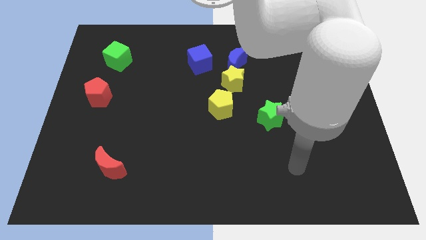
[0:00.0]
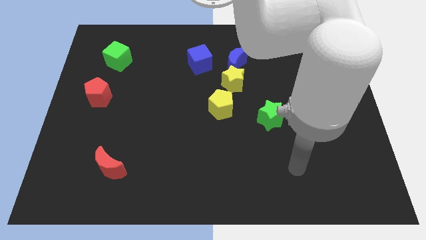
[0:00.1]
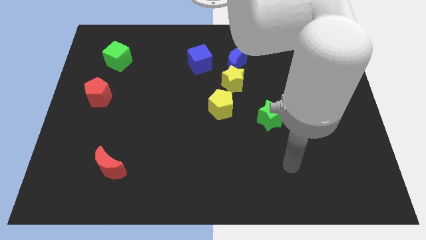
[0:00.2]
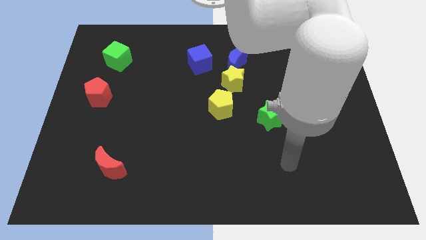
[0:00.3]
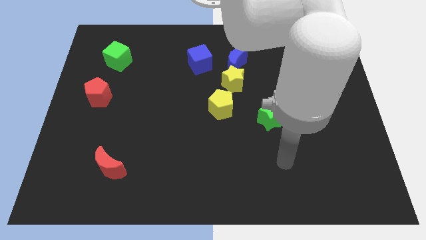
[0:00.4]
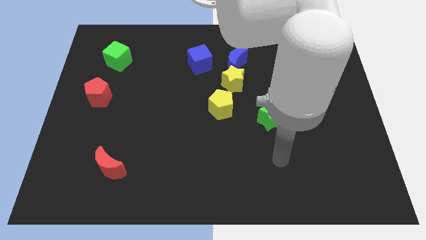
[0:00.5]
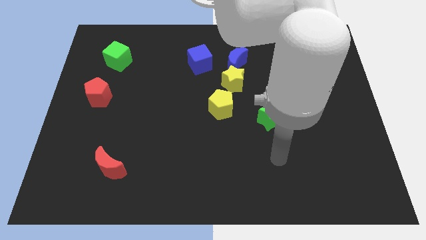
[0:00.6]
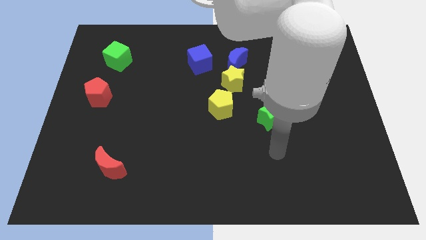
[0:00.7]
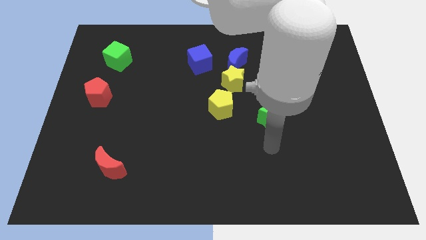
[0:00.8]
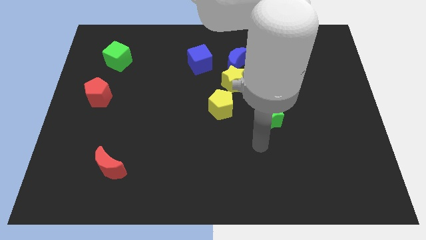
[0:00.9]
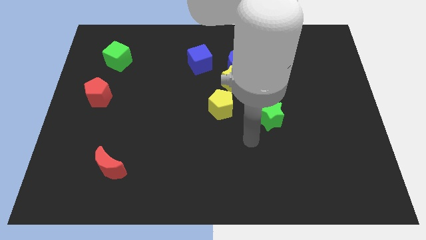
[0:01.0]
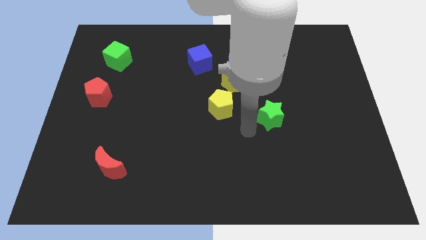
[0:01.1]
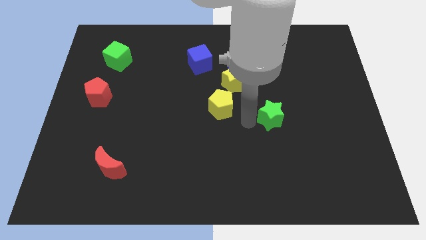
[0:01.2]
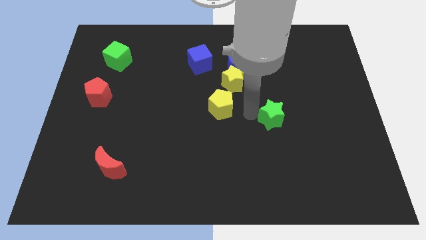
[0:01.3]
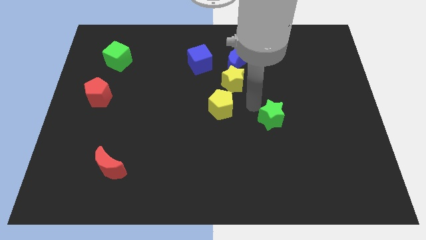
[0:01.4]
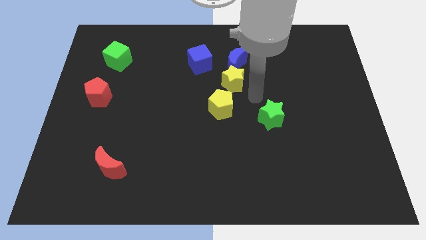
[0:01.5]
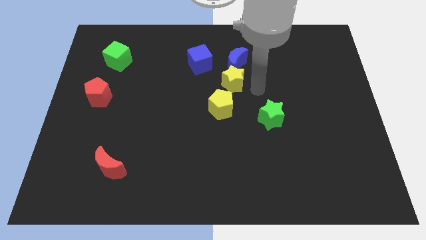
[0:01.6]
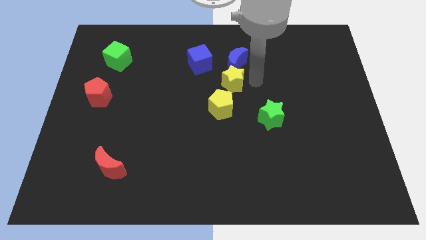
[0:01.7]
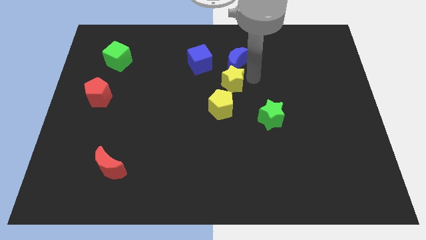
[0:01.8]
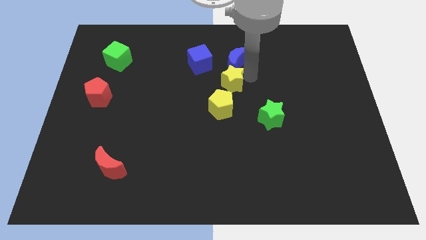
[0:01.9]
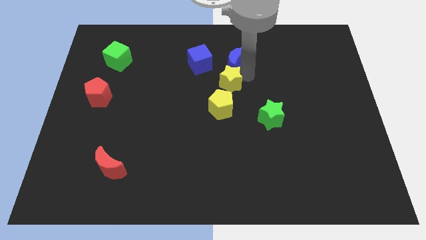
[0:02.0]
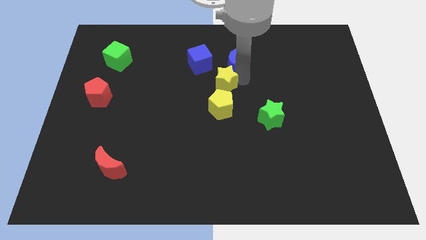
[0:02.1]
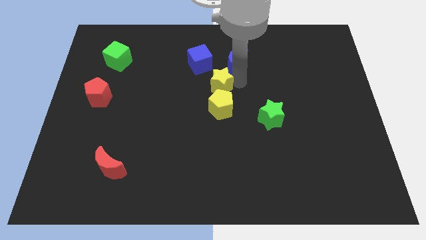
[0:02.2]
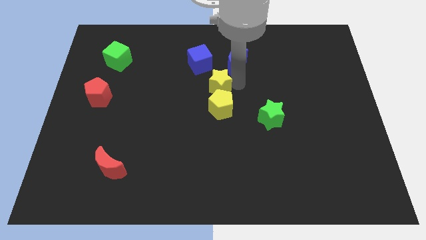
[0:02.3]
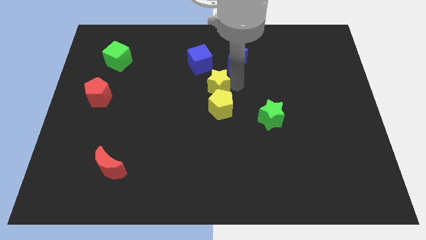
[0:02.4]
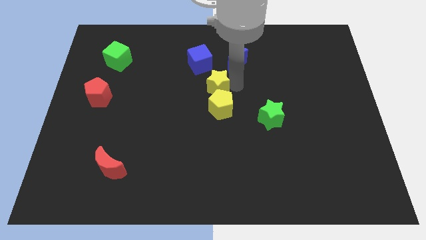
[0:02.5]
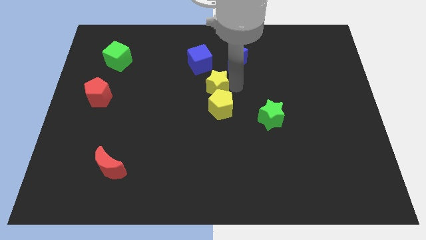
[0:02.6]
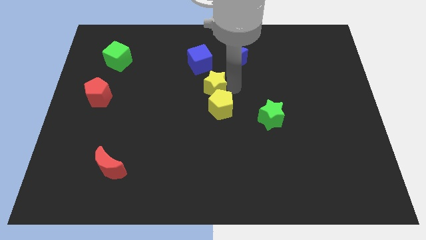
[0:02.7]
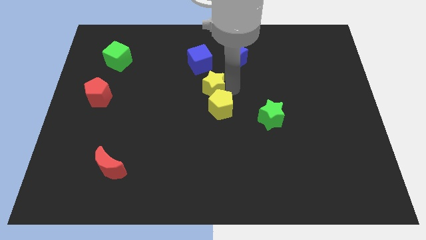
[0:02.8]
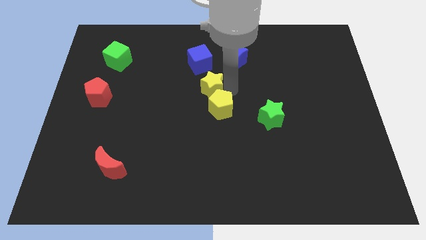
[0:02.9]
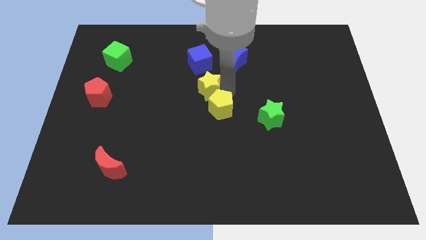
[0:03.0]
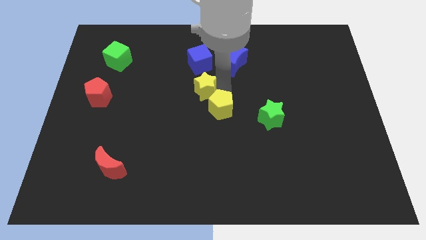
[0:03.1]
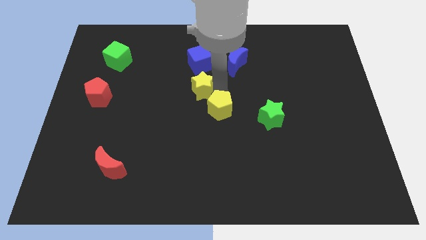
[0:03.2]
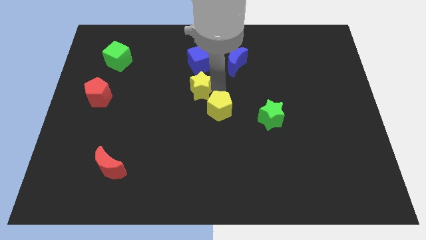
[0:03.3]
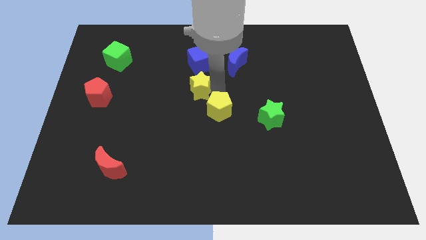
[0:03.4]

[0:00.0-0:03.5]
move your arm close to the yellow star

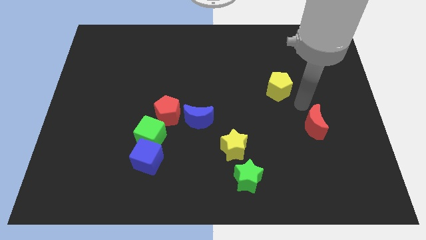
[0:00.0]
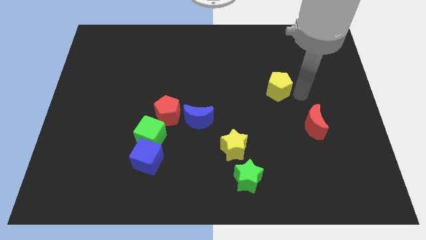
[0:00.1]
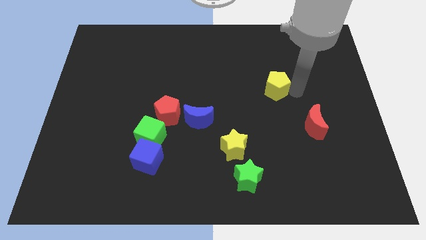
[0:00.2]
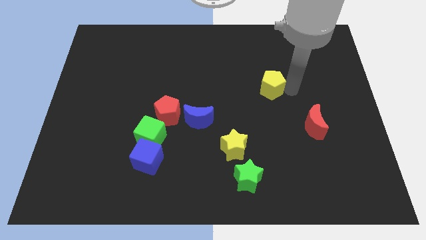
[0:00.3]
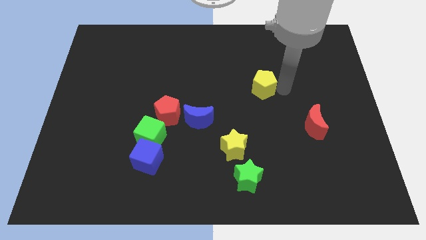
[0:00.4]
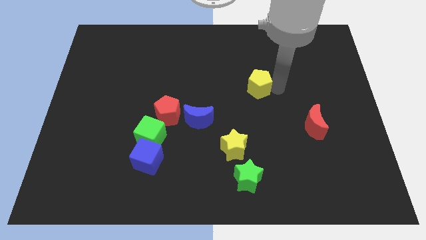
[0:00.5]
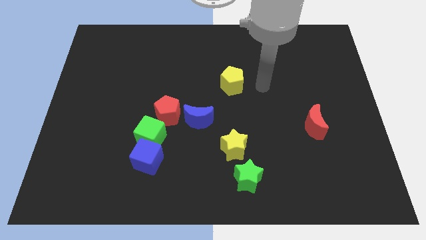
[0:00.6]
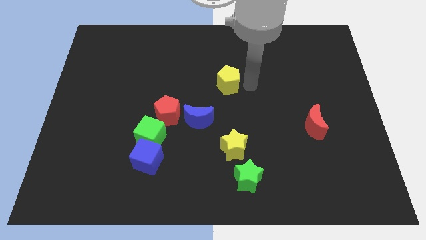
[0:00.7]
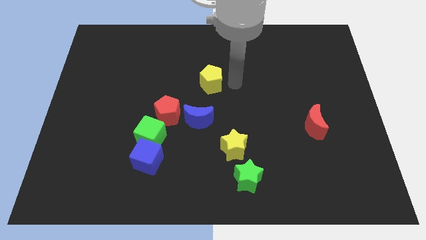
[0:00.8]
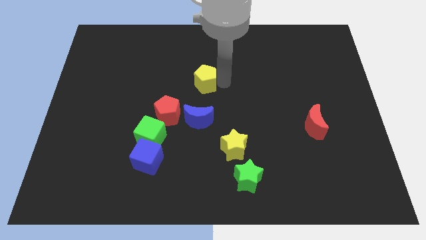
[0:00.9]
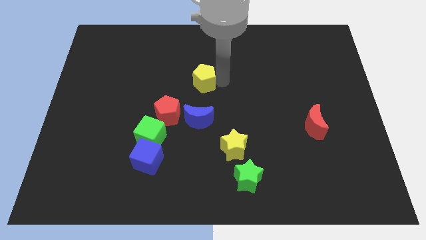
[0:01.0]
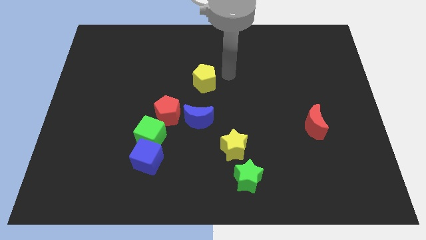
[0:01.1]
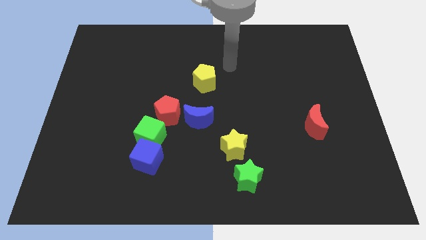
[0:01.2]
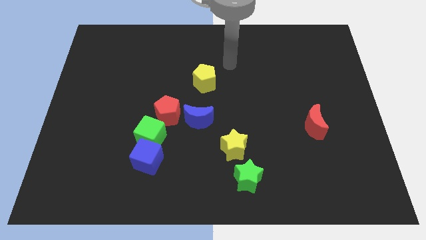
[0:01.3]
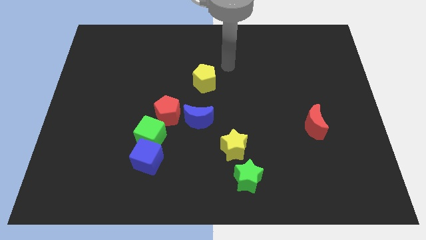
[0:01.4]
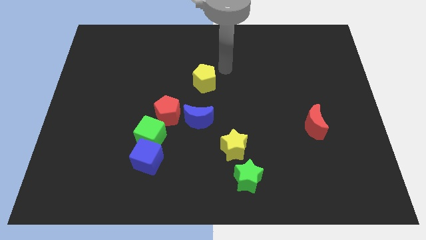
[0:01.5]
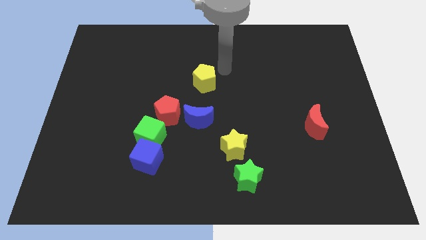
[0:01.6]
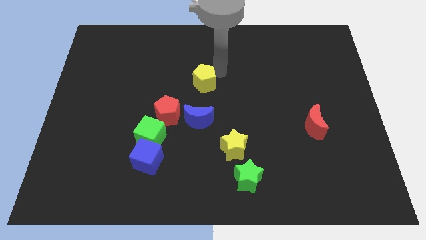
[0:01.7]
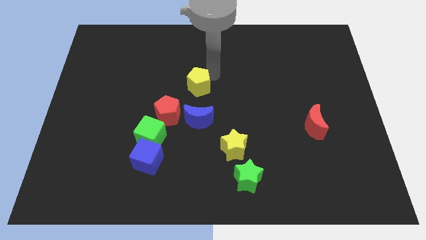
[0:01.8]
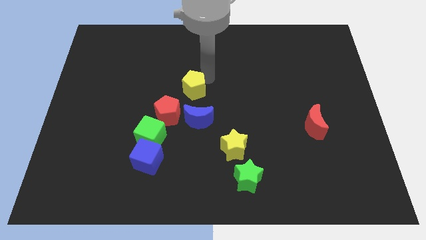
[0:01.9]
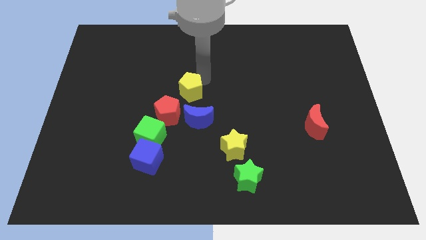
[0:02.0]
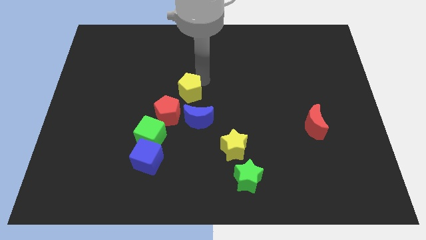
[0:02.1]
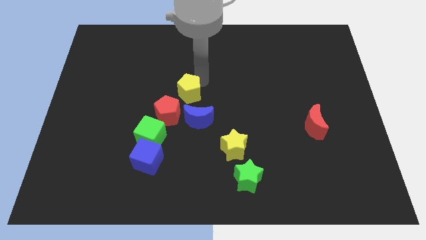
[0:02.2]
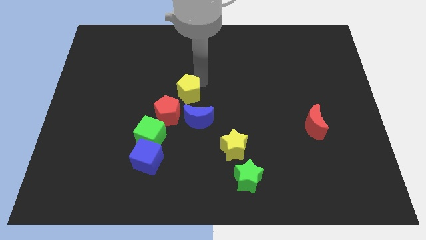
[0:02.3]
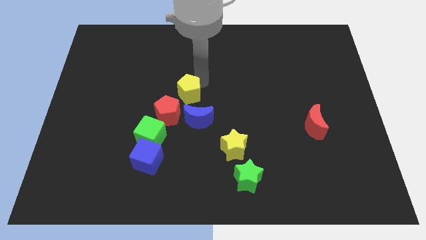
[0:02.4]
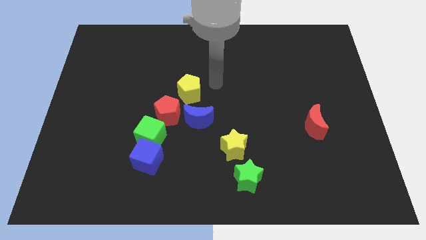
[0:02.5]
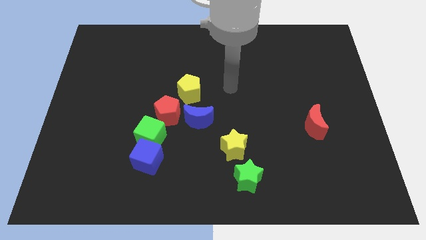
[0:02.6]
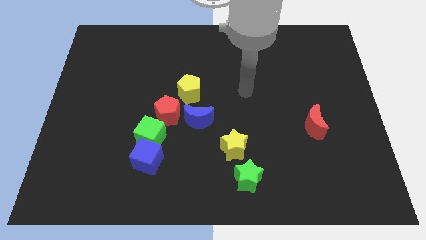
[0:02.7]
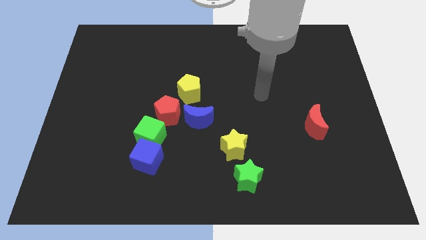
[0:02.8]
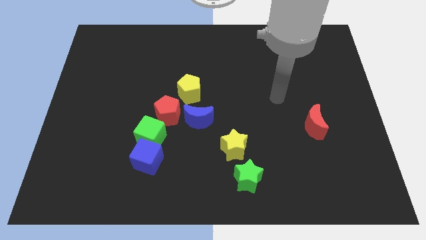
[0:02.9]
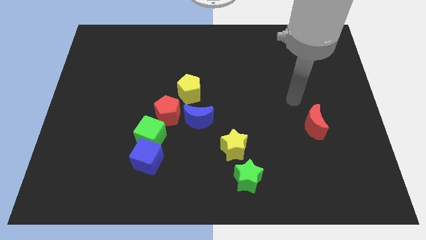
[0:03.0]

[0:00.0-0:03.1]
place the yellow pentagon at the center of the board

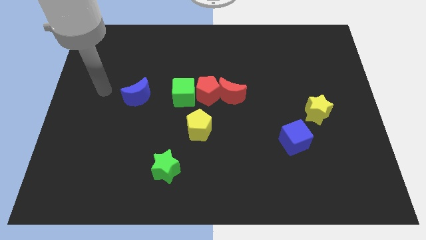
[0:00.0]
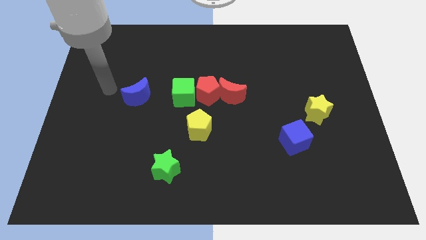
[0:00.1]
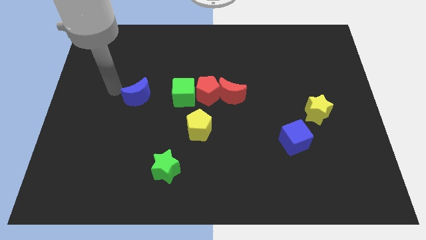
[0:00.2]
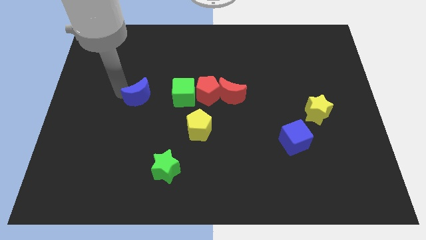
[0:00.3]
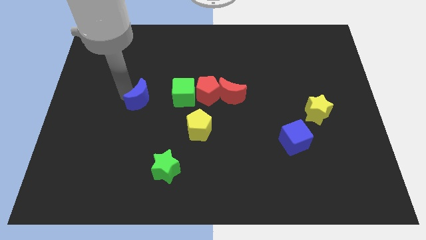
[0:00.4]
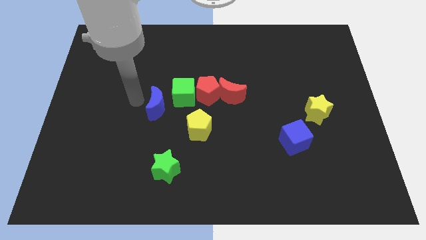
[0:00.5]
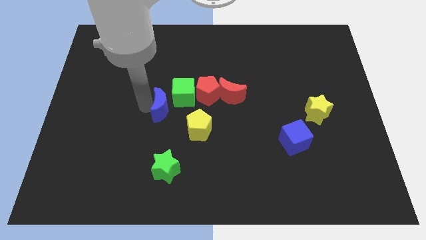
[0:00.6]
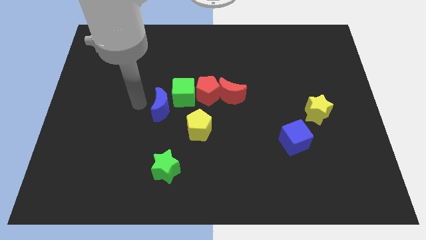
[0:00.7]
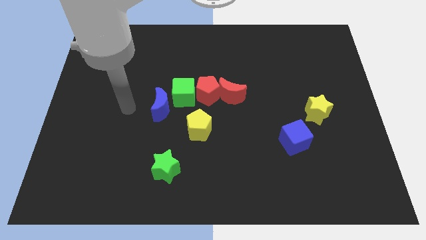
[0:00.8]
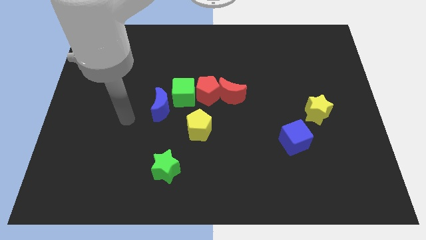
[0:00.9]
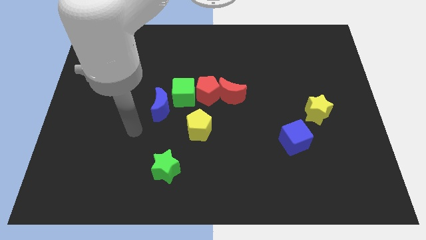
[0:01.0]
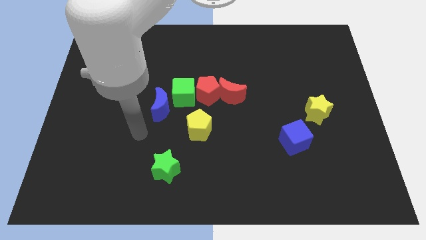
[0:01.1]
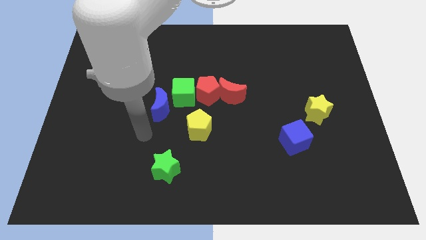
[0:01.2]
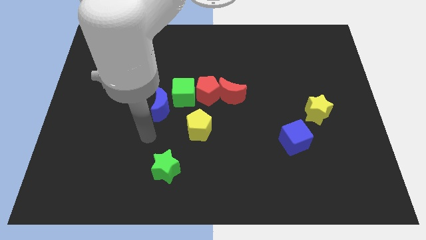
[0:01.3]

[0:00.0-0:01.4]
move the blue crescent to the left bottom of the green cube

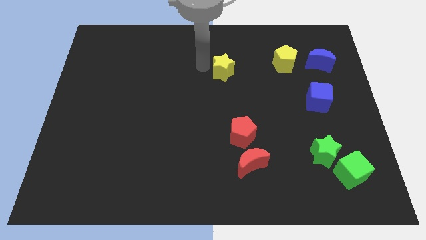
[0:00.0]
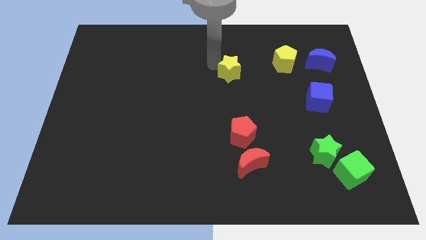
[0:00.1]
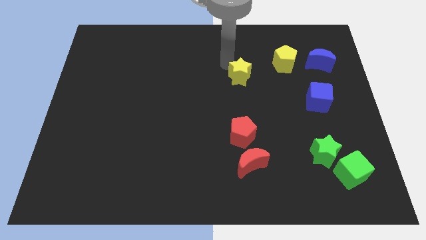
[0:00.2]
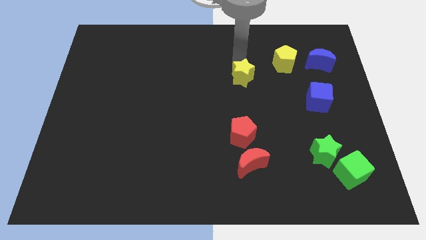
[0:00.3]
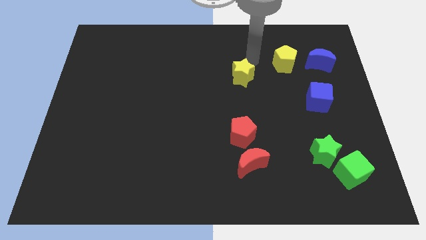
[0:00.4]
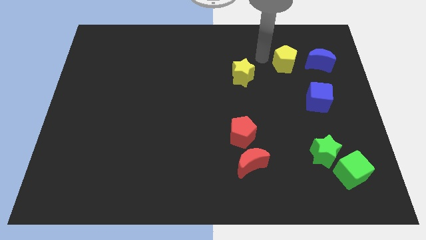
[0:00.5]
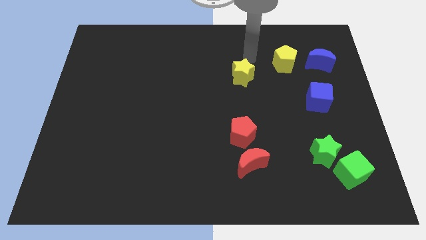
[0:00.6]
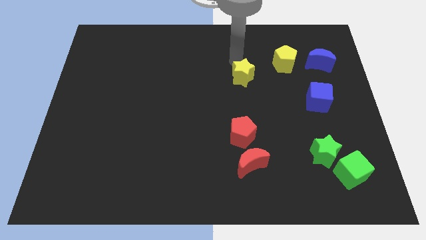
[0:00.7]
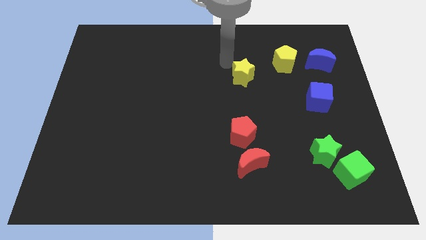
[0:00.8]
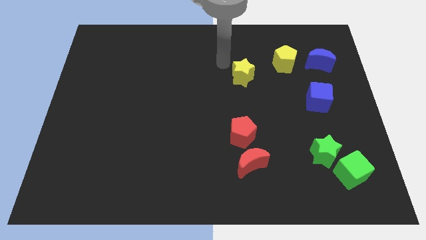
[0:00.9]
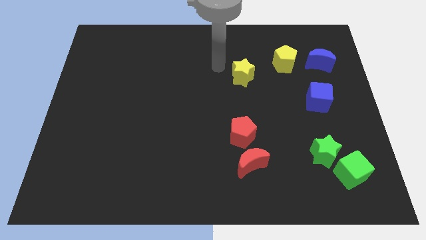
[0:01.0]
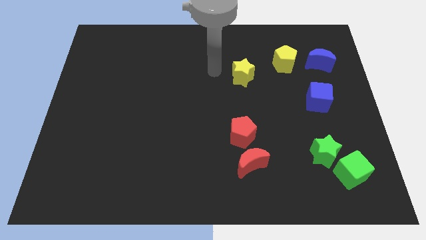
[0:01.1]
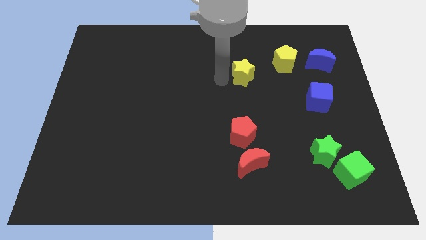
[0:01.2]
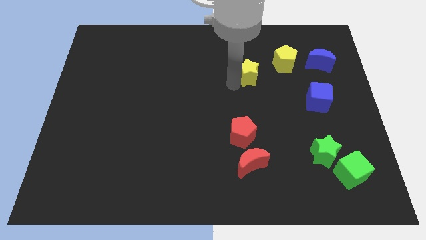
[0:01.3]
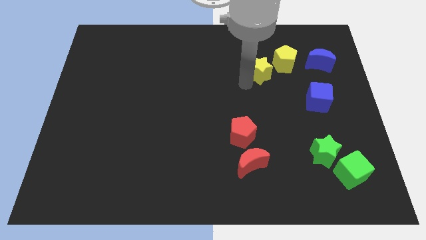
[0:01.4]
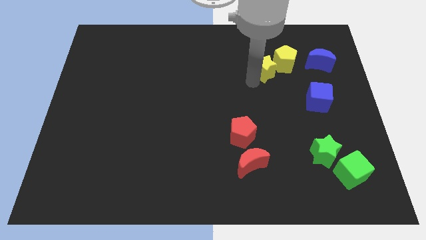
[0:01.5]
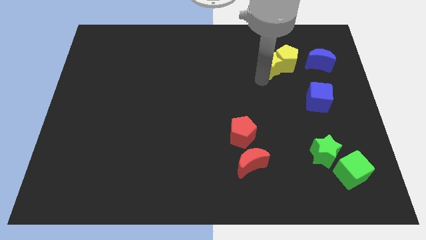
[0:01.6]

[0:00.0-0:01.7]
move the yellow star towards the yellow pentagon
